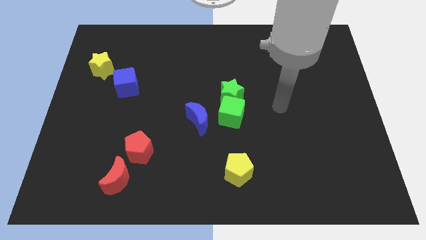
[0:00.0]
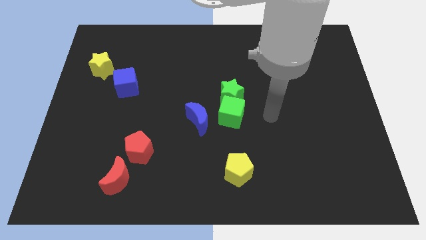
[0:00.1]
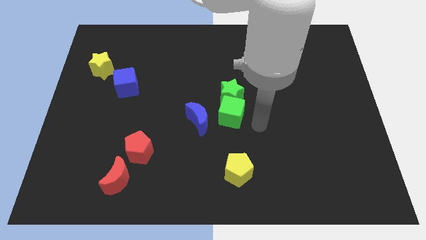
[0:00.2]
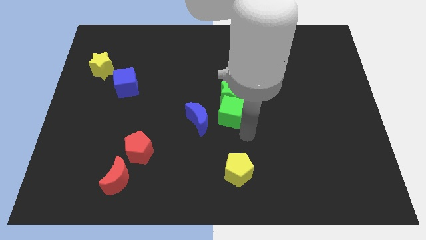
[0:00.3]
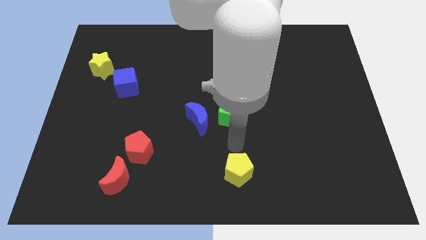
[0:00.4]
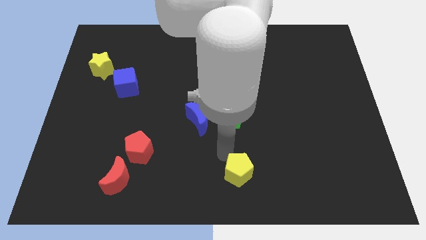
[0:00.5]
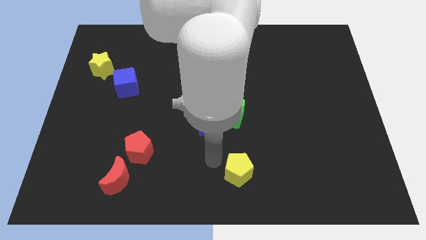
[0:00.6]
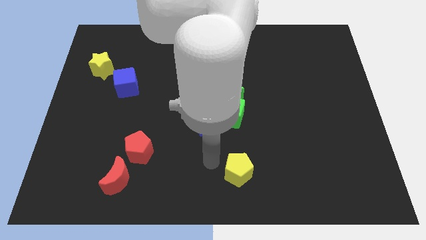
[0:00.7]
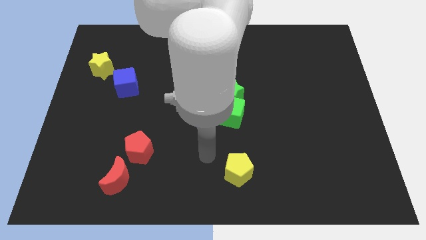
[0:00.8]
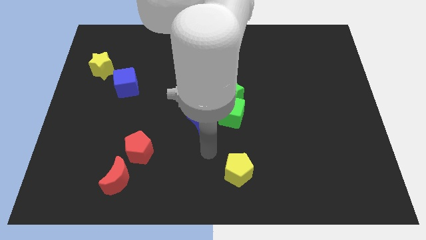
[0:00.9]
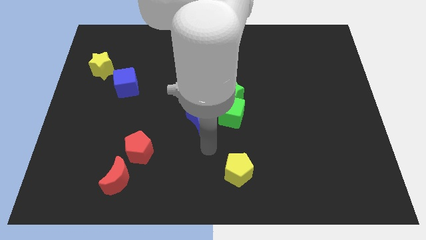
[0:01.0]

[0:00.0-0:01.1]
move your arm towards the blue crescent

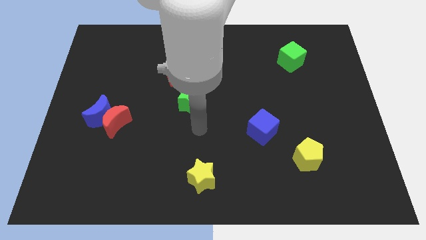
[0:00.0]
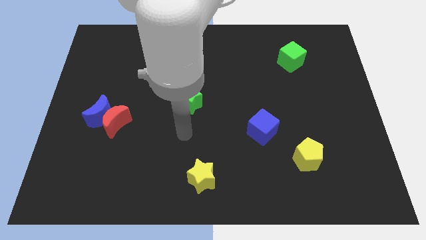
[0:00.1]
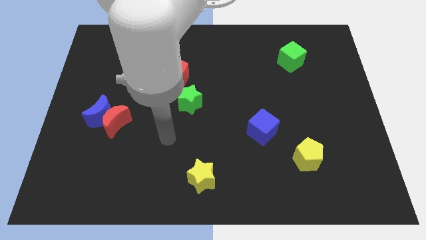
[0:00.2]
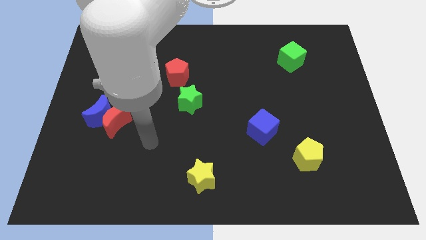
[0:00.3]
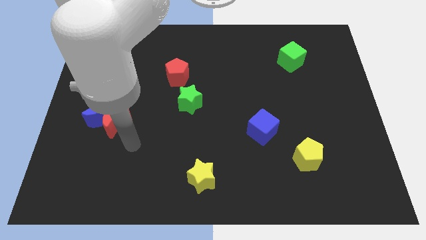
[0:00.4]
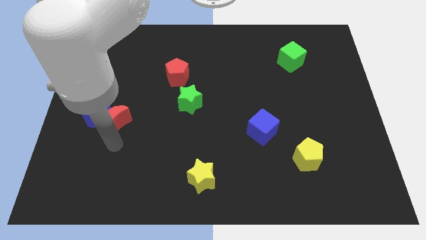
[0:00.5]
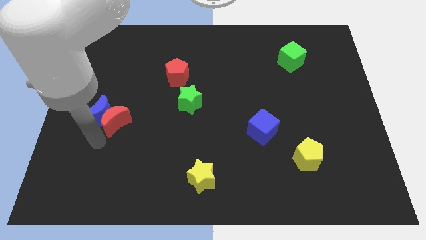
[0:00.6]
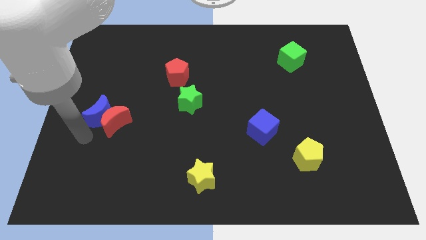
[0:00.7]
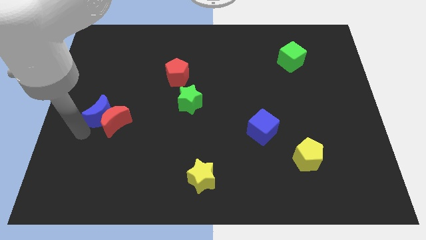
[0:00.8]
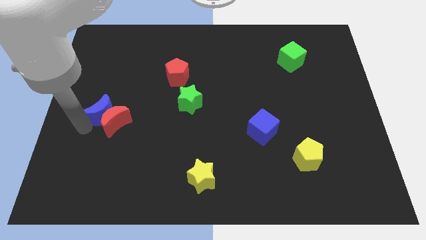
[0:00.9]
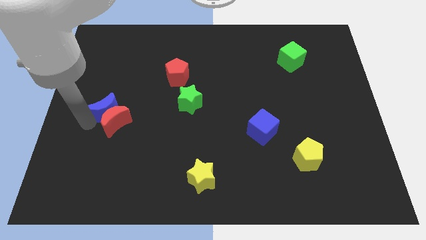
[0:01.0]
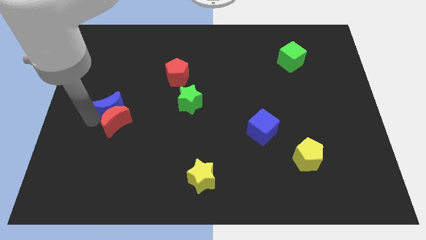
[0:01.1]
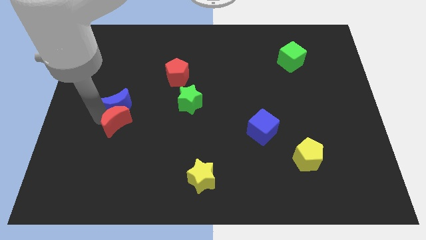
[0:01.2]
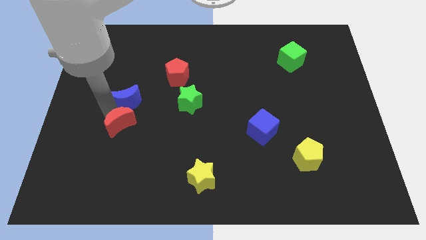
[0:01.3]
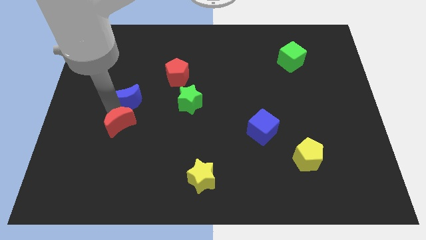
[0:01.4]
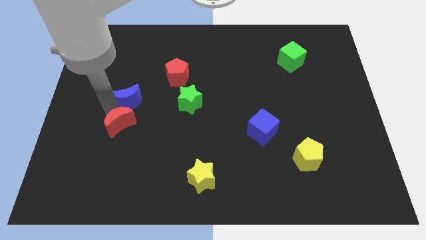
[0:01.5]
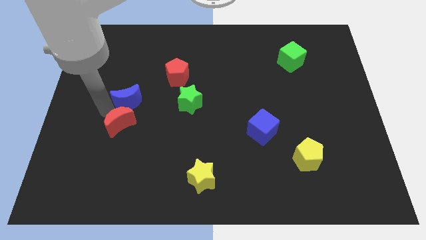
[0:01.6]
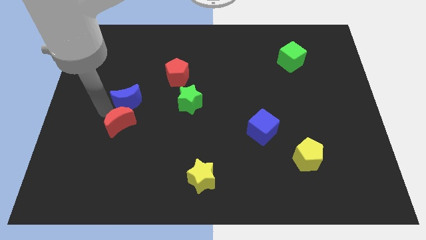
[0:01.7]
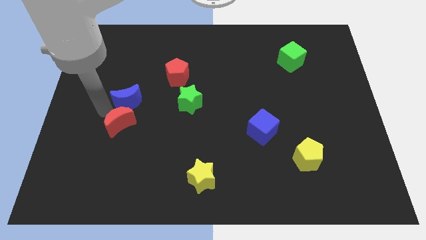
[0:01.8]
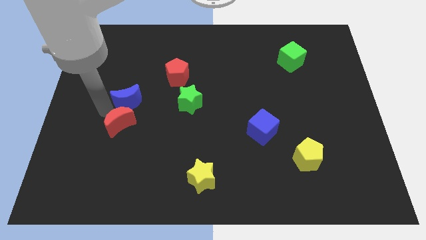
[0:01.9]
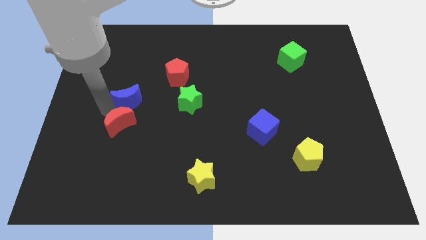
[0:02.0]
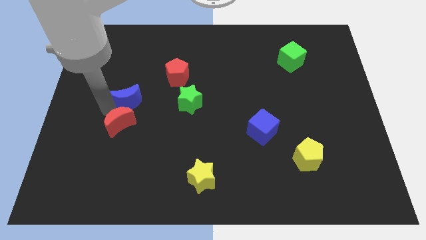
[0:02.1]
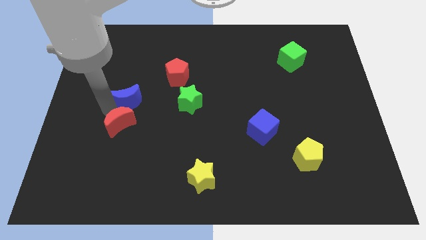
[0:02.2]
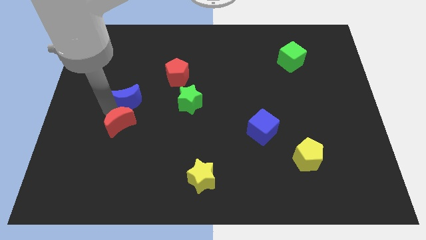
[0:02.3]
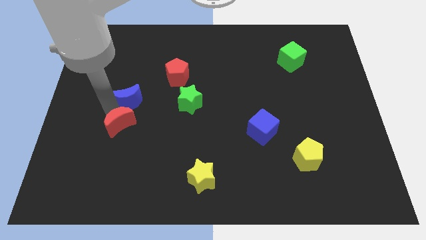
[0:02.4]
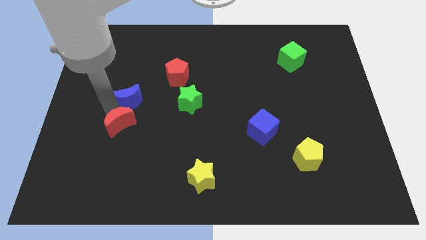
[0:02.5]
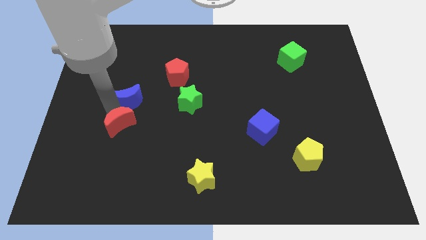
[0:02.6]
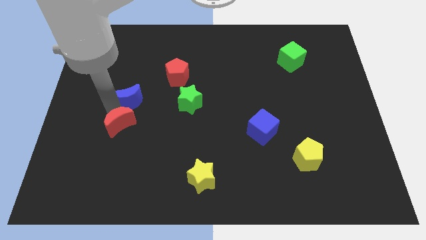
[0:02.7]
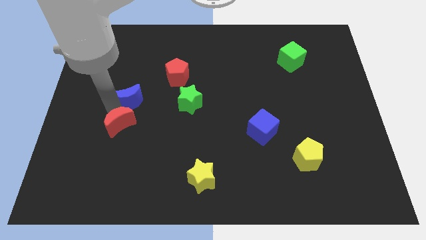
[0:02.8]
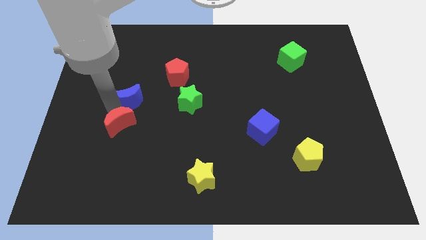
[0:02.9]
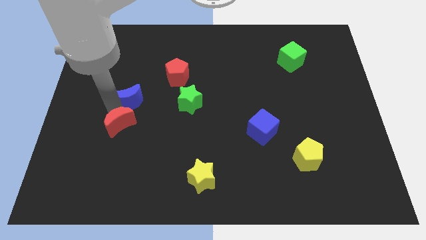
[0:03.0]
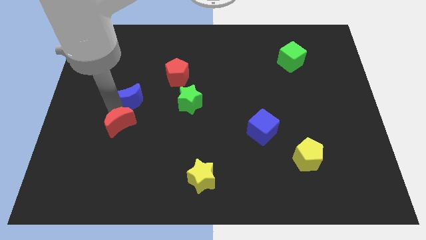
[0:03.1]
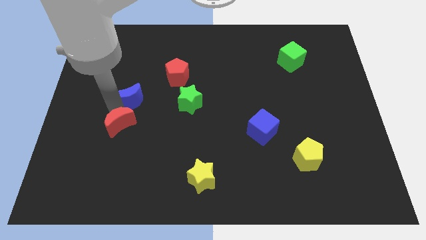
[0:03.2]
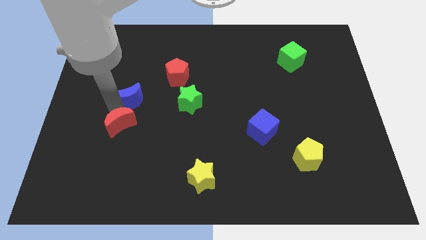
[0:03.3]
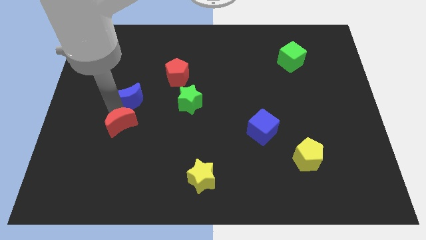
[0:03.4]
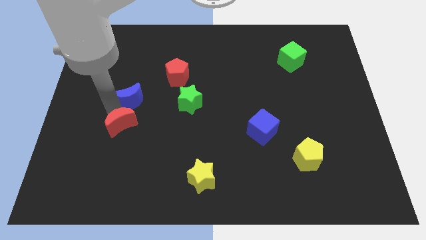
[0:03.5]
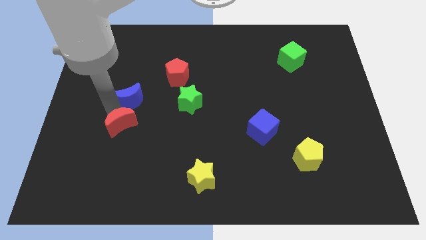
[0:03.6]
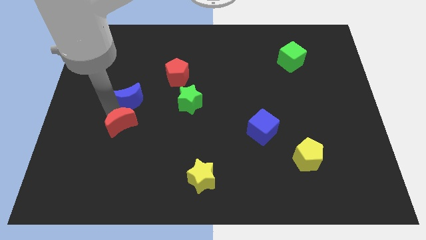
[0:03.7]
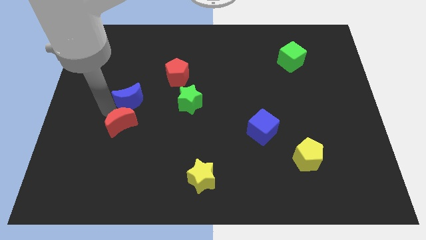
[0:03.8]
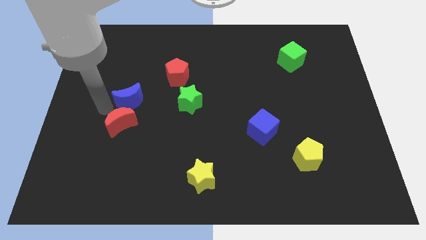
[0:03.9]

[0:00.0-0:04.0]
place the blue crescent horizontally to the left of the green star

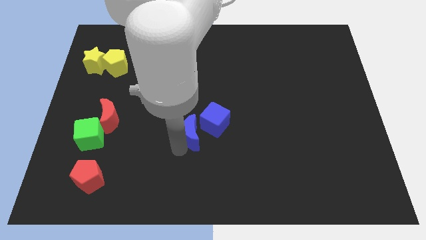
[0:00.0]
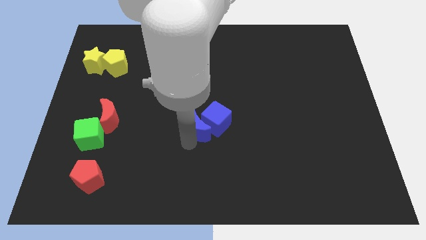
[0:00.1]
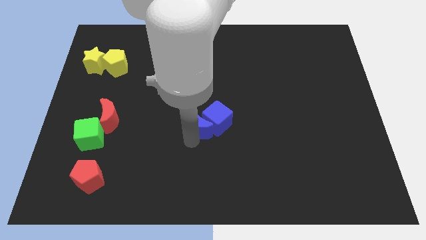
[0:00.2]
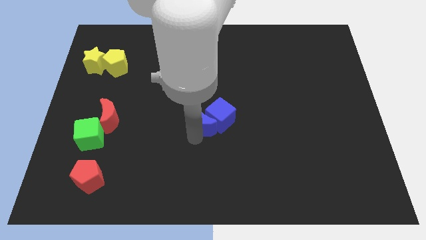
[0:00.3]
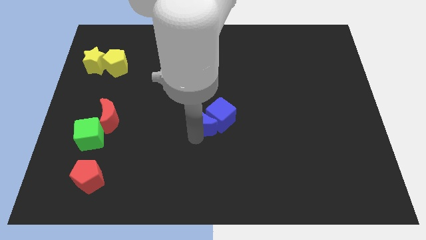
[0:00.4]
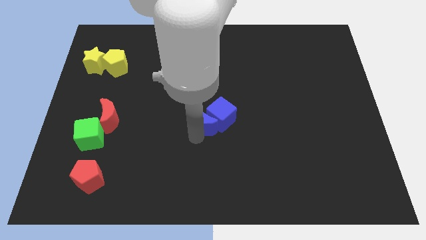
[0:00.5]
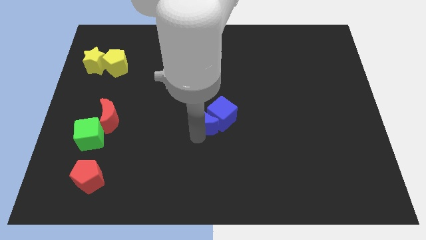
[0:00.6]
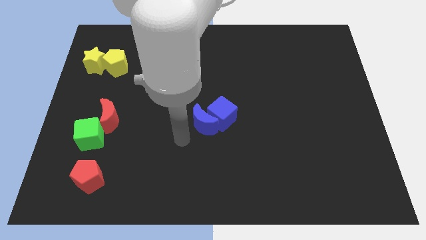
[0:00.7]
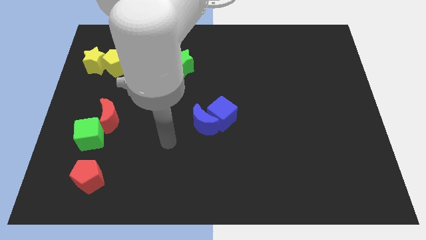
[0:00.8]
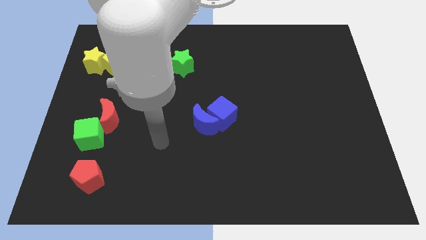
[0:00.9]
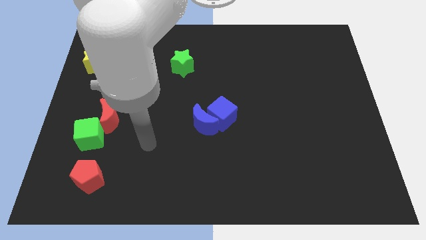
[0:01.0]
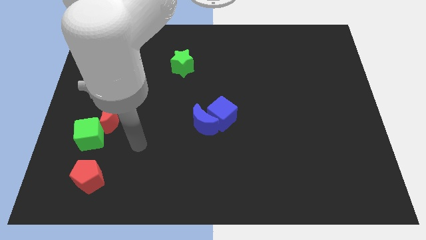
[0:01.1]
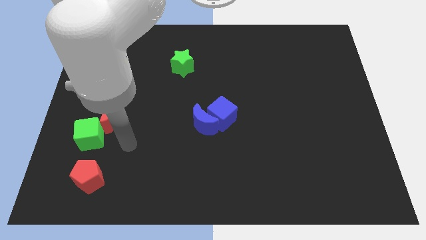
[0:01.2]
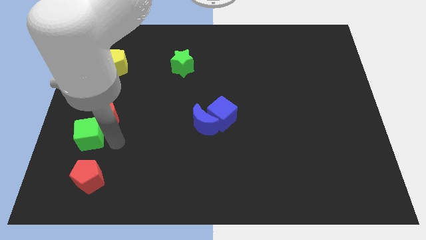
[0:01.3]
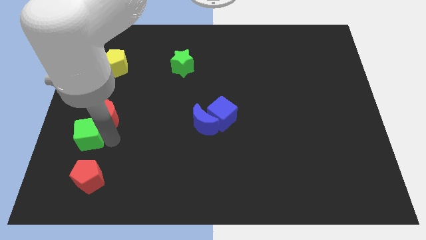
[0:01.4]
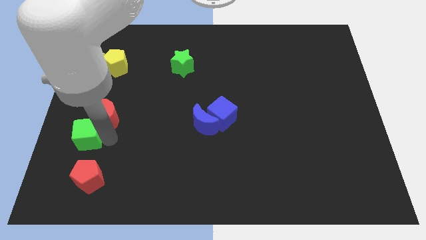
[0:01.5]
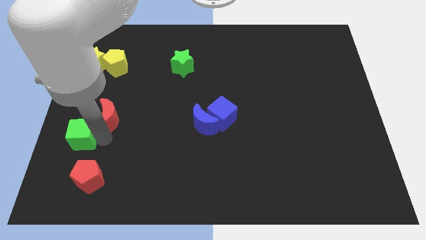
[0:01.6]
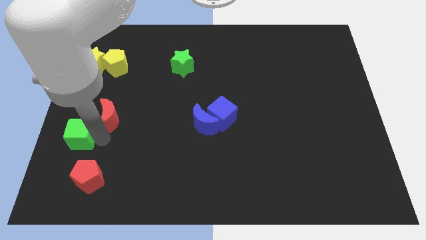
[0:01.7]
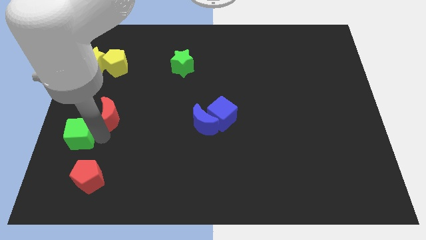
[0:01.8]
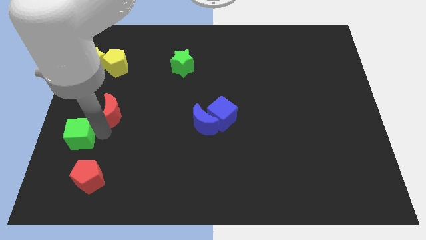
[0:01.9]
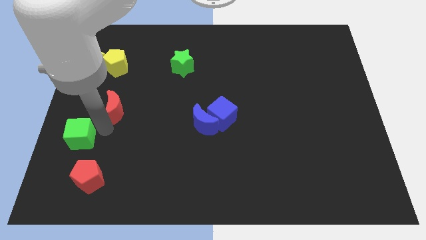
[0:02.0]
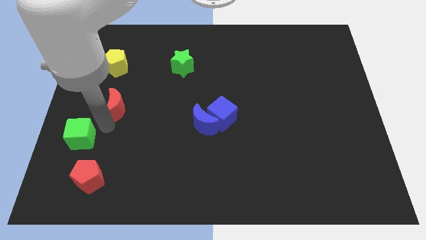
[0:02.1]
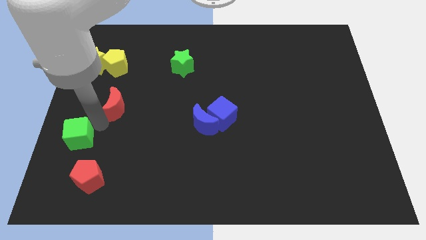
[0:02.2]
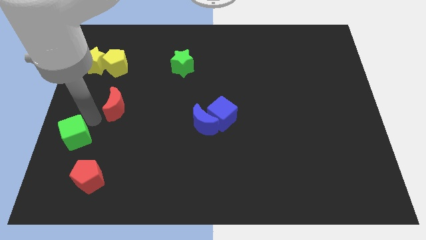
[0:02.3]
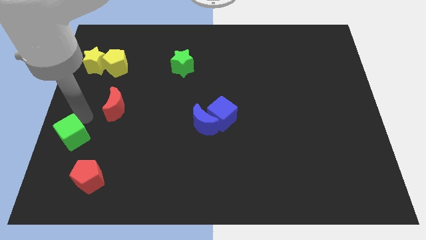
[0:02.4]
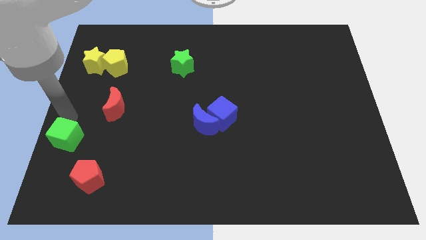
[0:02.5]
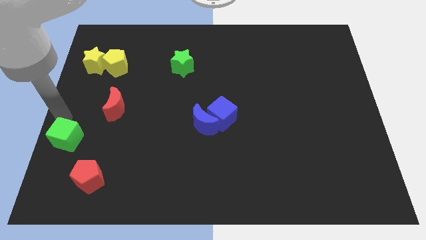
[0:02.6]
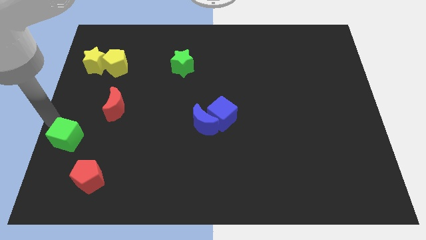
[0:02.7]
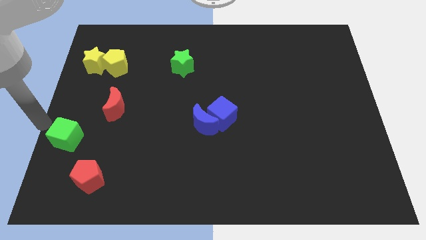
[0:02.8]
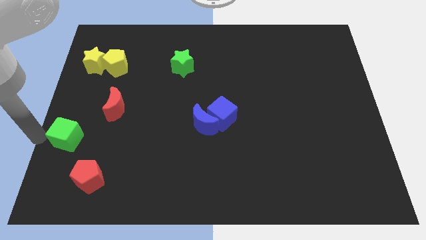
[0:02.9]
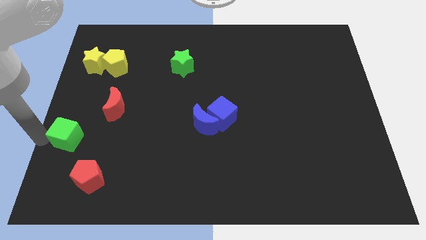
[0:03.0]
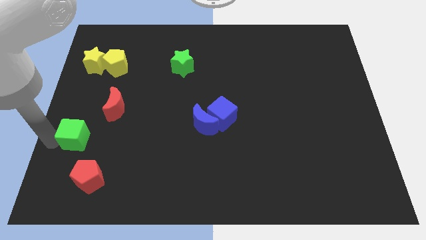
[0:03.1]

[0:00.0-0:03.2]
separate green cube from red moon

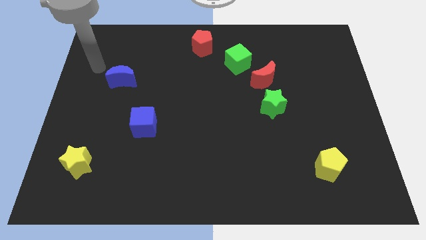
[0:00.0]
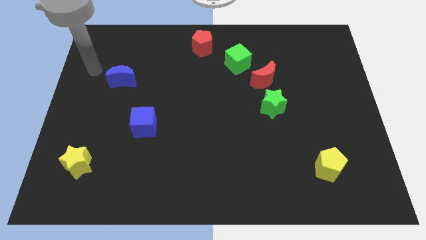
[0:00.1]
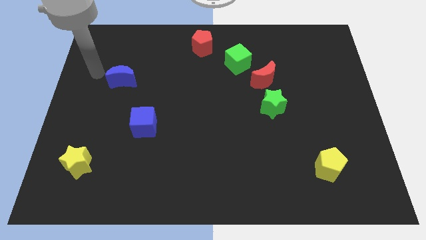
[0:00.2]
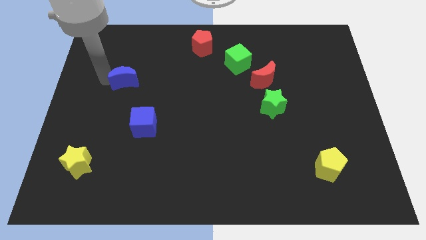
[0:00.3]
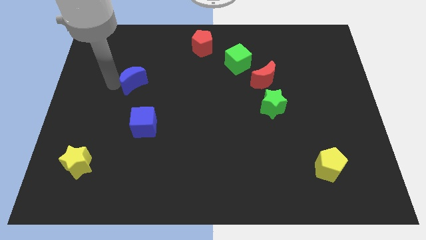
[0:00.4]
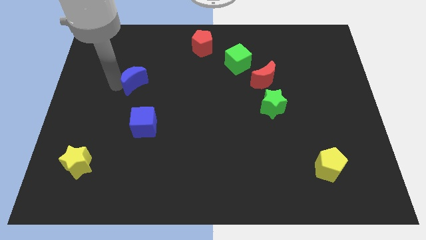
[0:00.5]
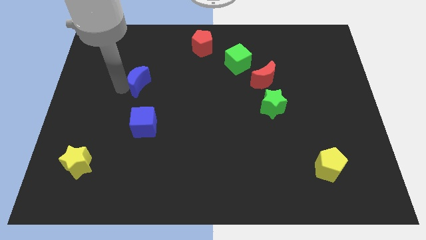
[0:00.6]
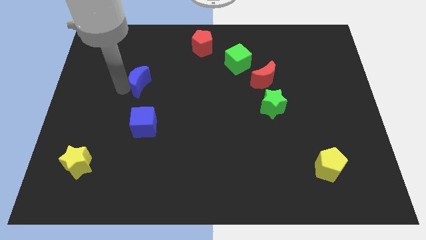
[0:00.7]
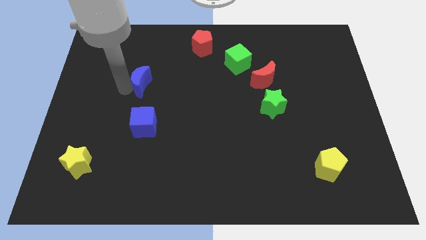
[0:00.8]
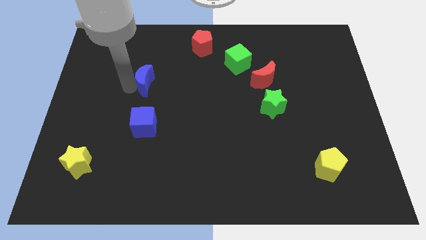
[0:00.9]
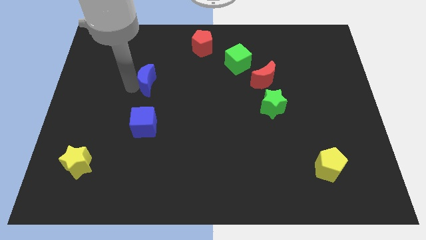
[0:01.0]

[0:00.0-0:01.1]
slide the blue moon above the blue cube
